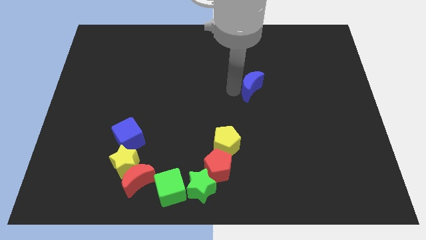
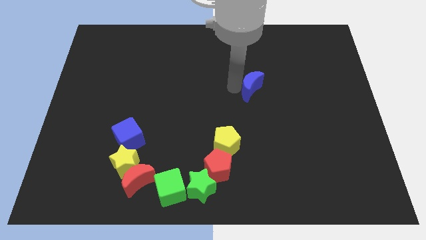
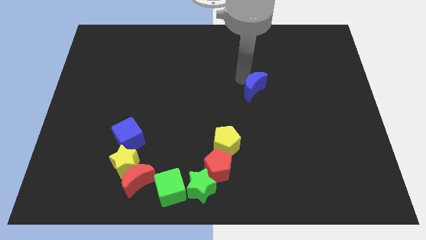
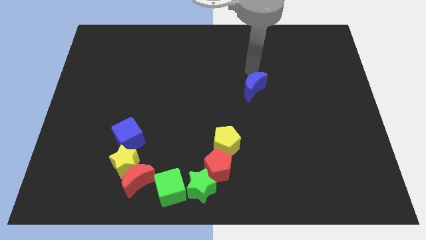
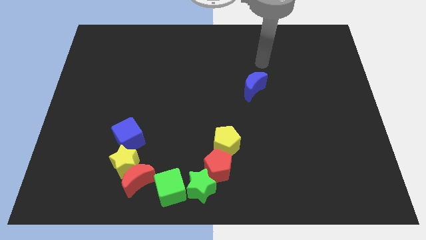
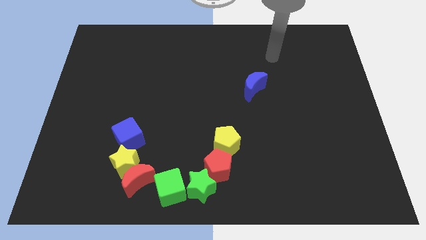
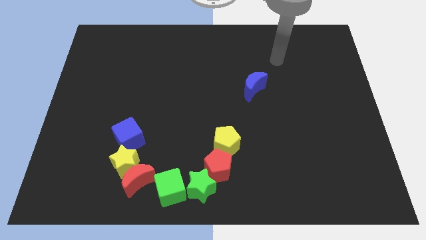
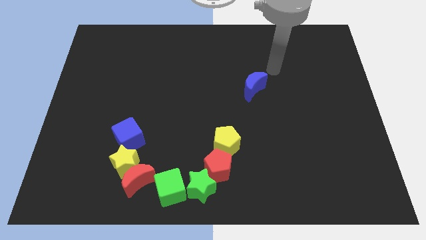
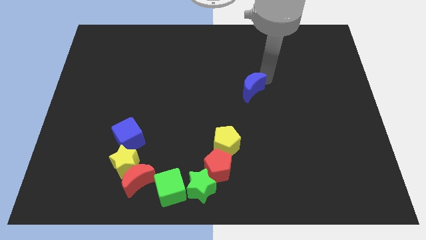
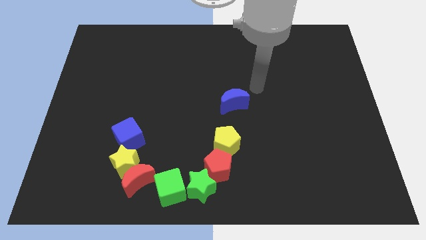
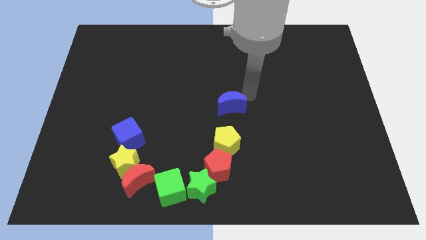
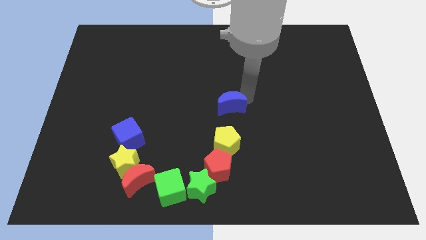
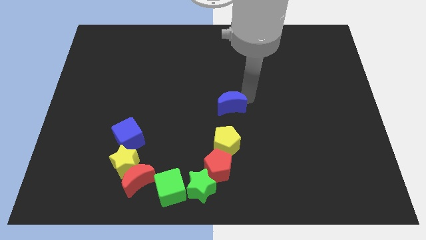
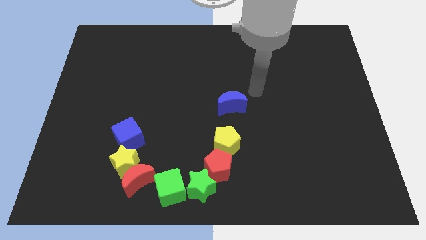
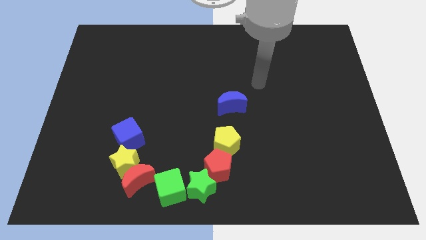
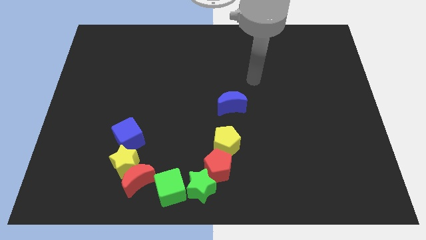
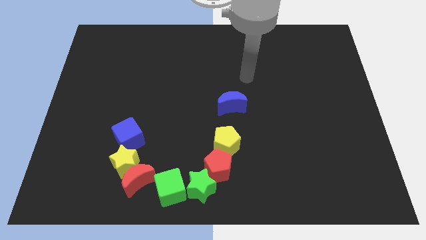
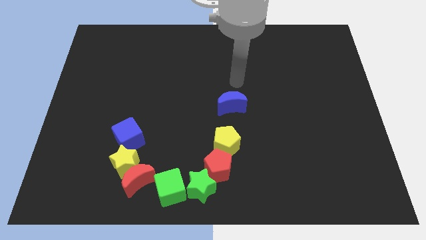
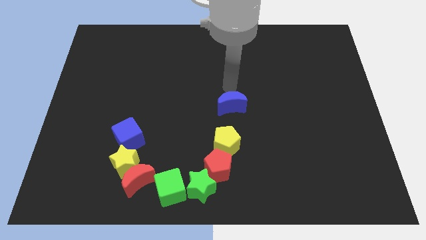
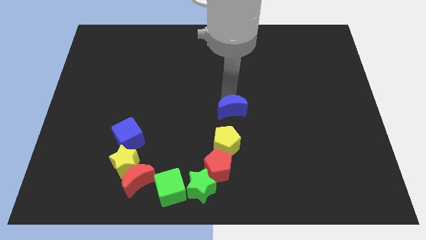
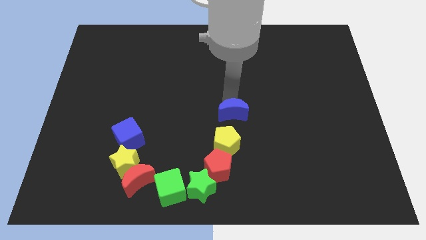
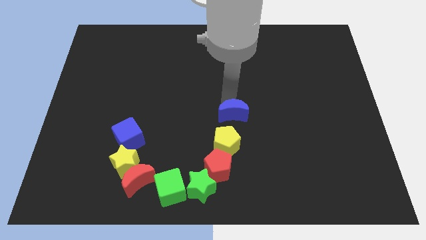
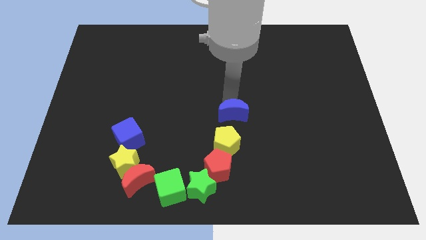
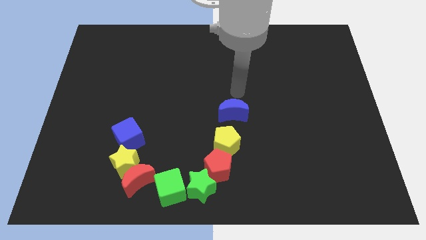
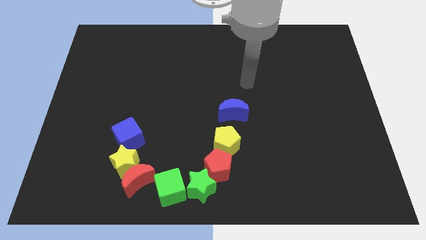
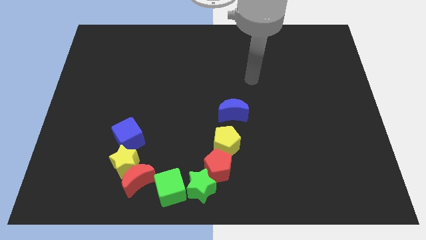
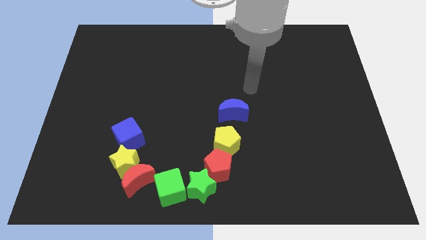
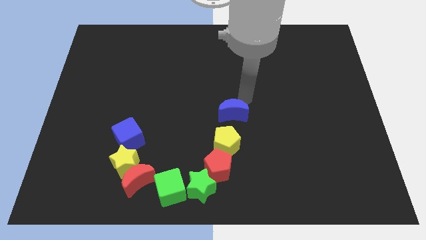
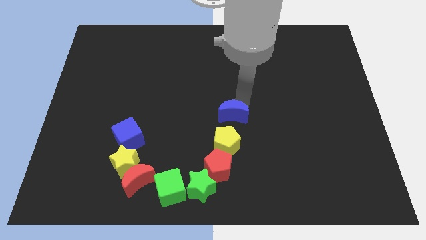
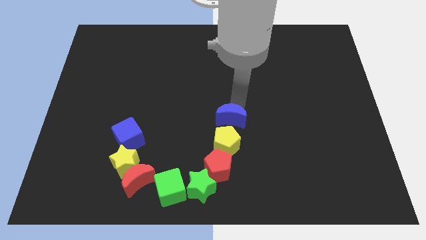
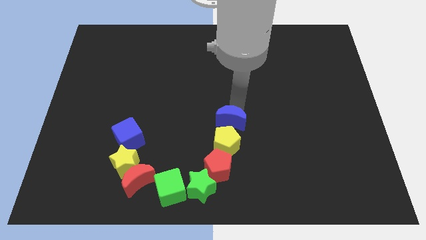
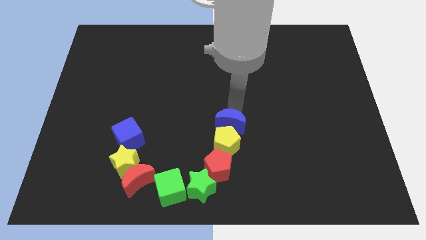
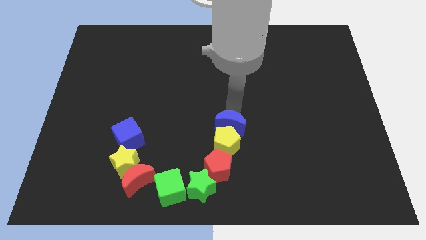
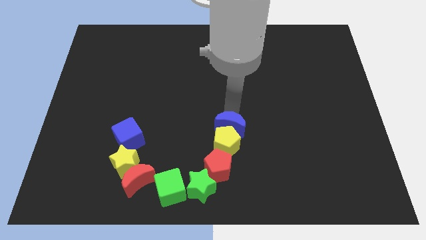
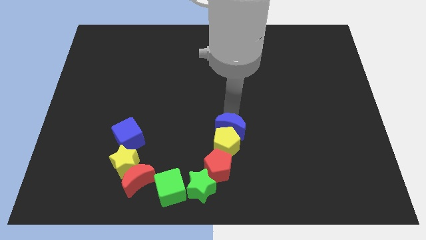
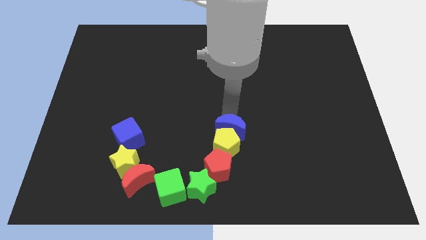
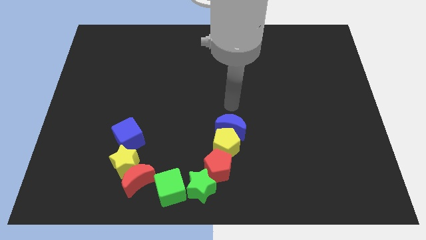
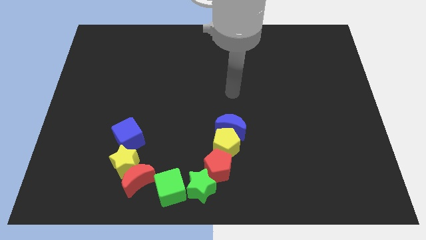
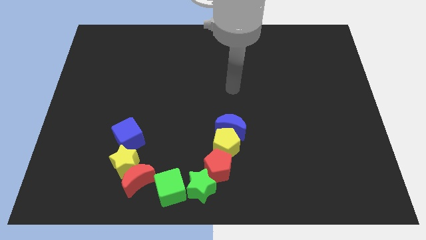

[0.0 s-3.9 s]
place the blue moon to the top of the yellow pentagon

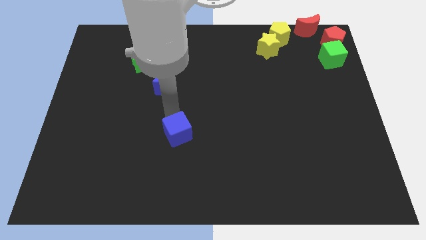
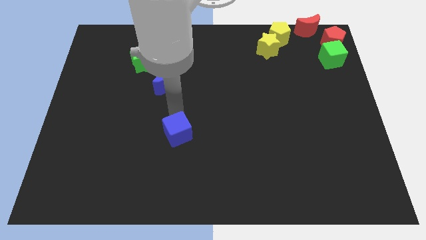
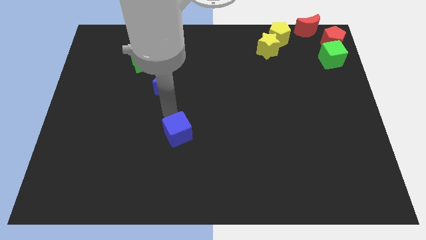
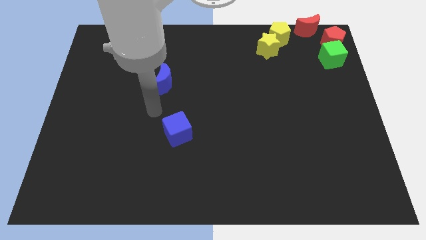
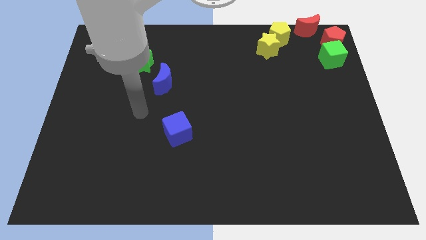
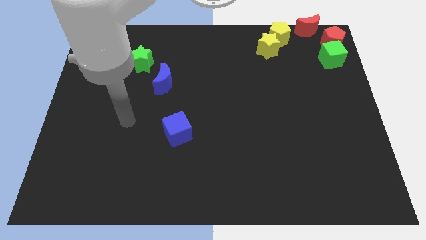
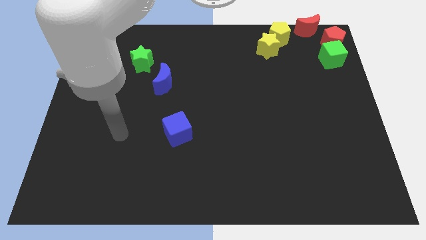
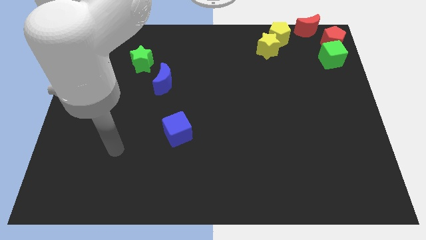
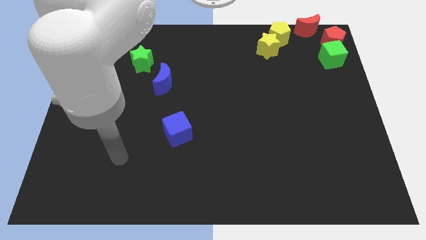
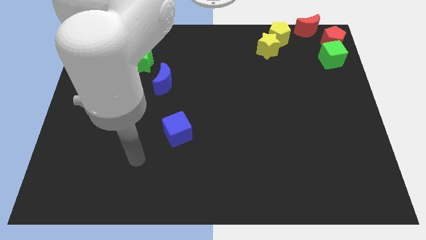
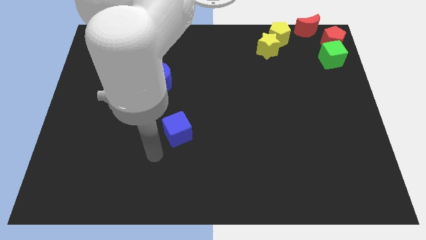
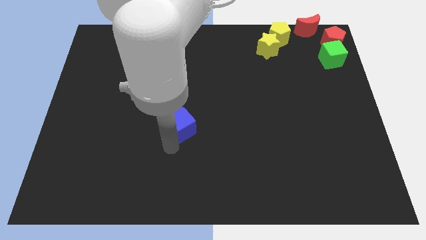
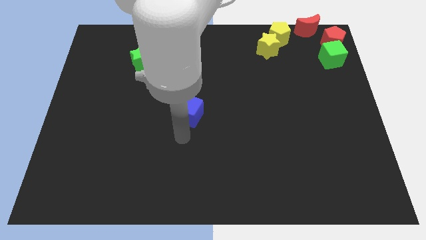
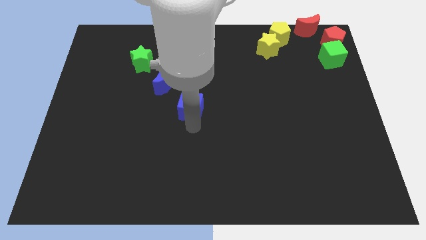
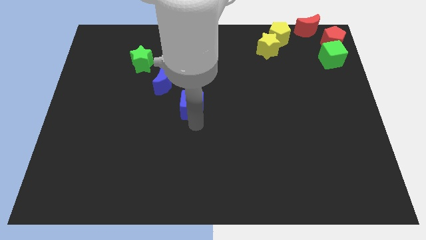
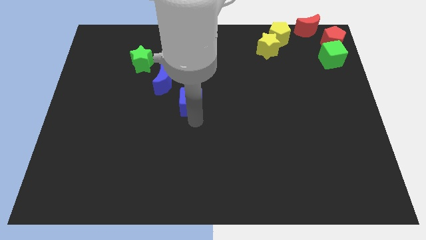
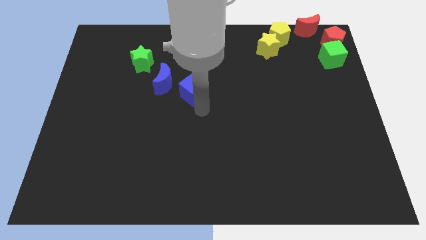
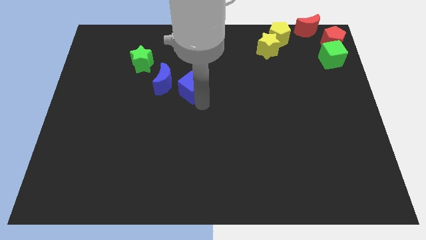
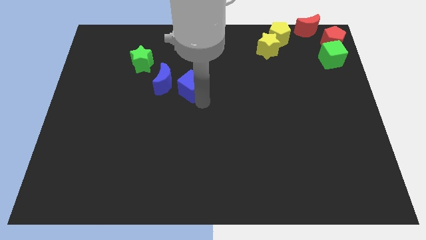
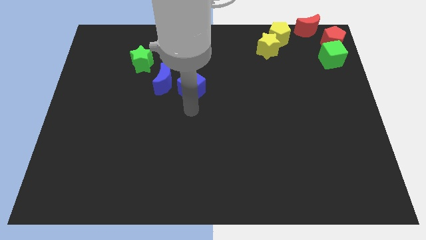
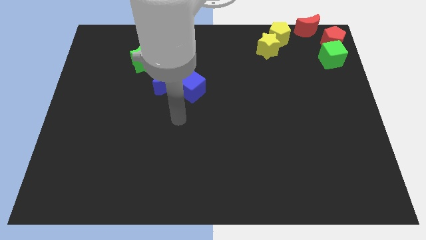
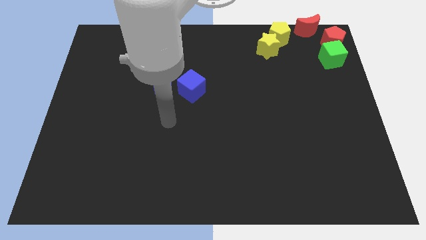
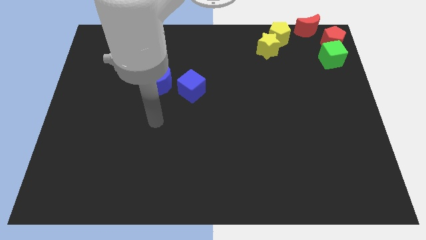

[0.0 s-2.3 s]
place the blue cube to the right of blue moon

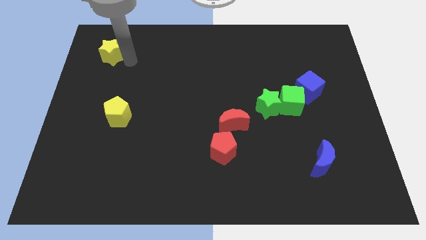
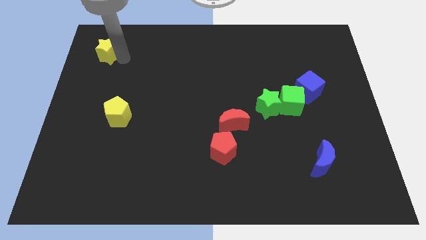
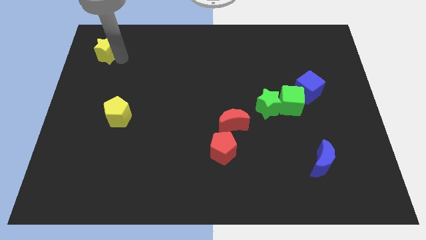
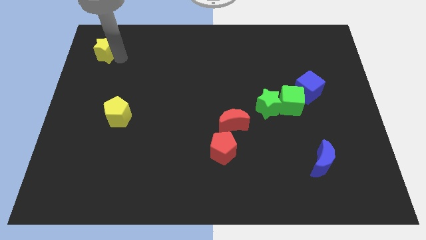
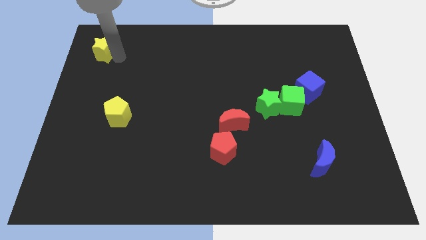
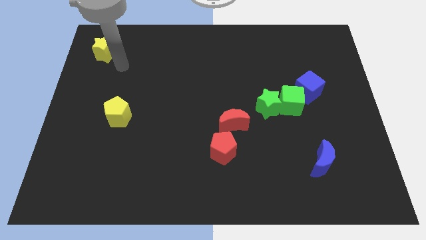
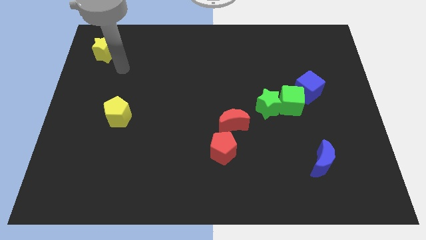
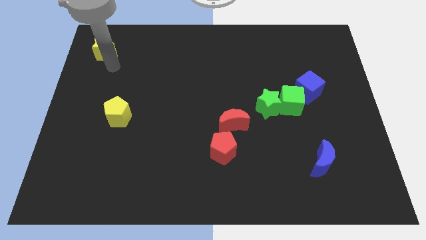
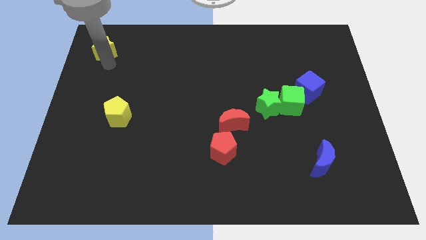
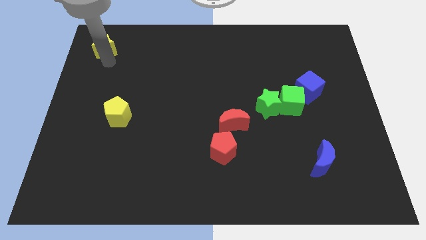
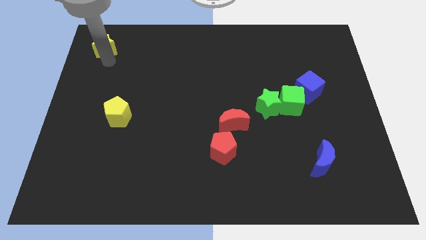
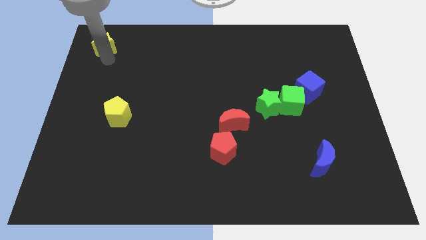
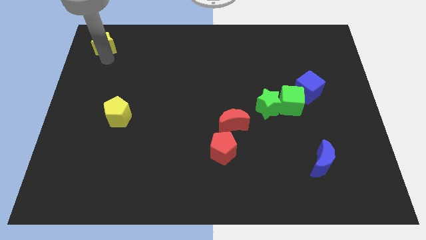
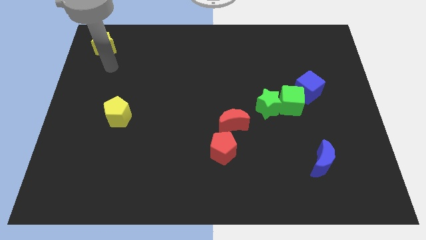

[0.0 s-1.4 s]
push the yellow star towards the top left of the board

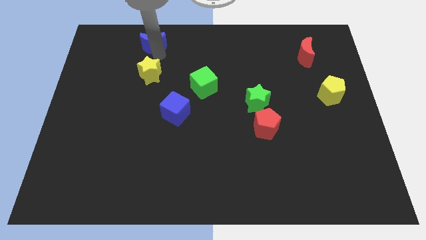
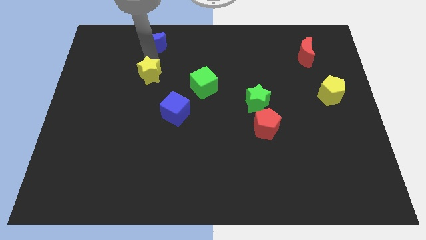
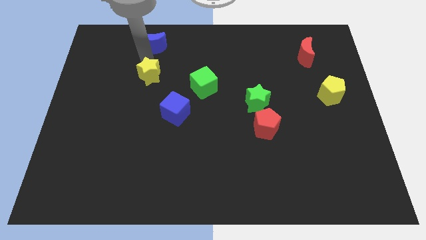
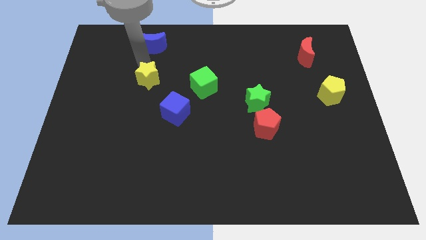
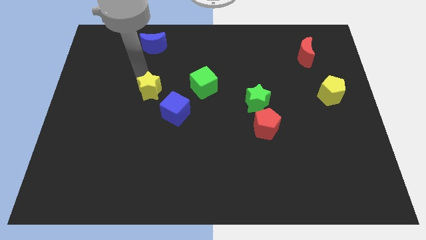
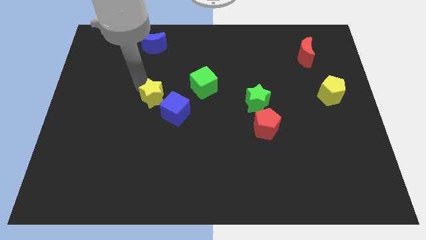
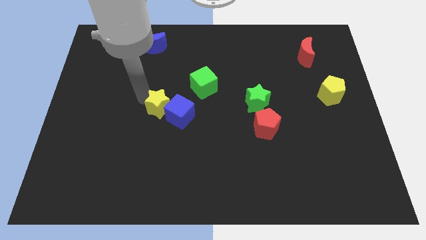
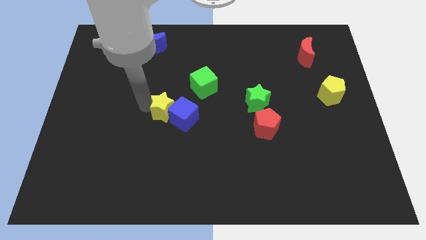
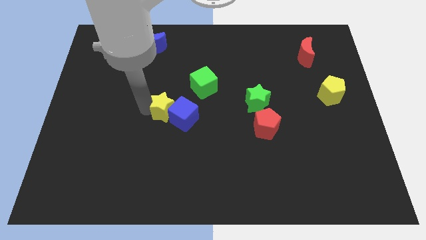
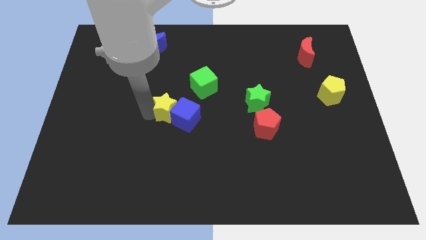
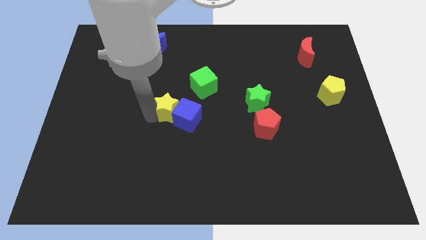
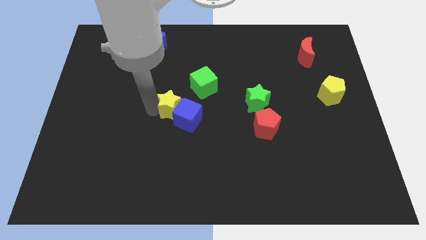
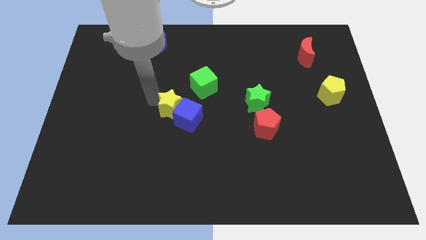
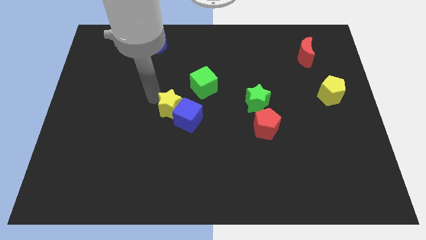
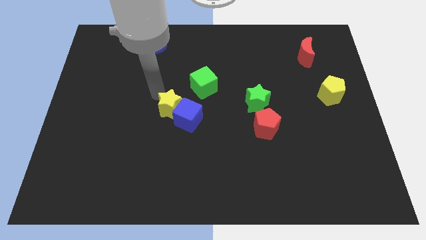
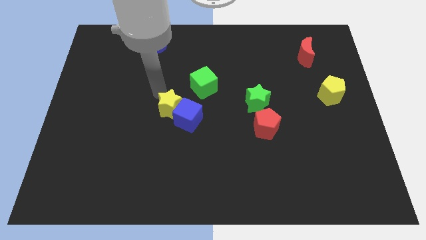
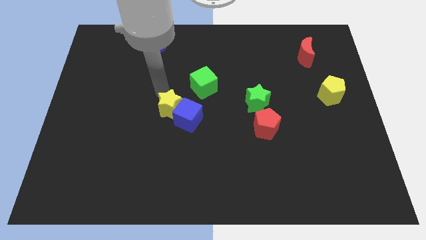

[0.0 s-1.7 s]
push the yellow star into the blue cube
